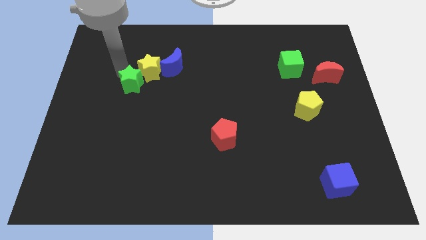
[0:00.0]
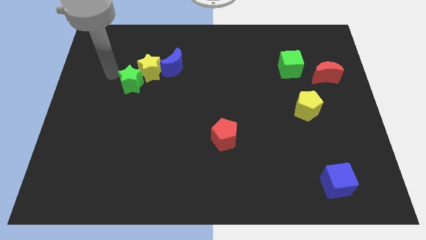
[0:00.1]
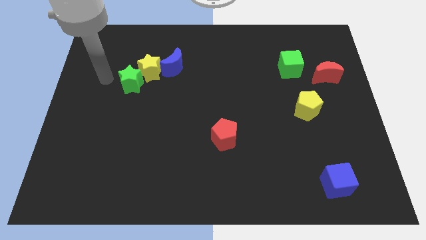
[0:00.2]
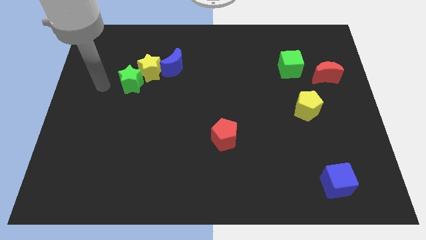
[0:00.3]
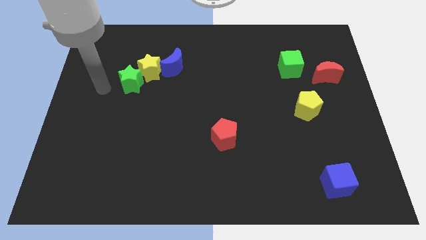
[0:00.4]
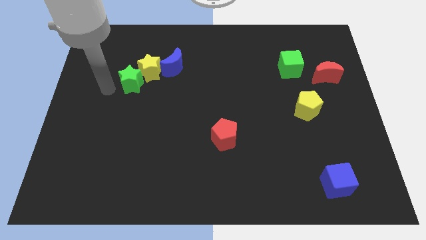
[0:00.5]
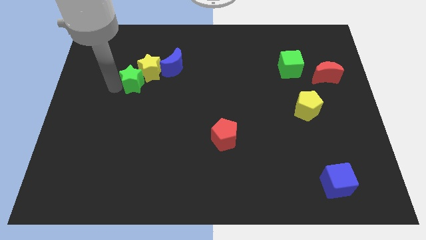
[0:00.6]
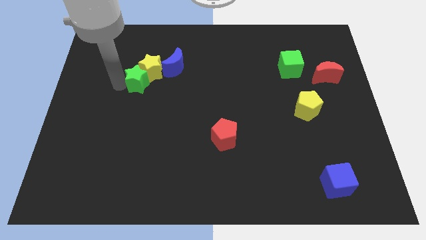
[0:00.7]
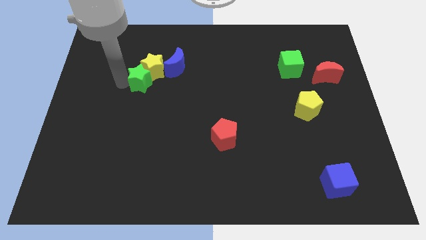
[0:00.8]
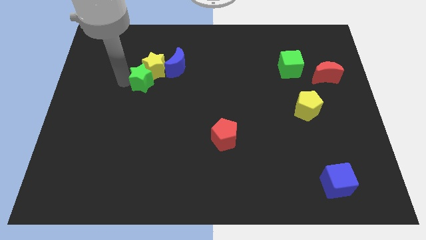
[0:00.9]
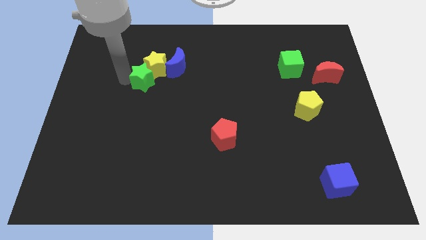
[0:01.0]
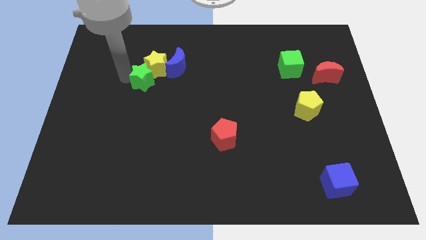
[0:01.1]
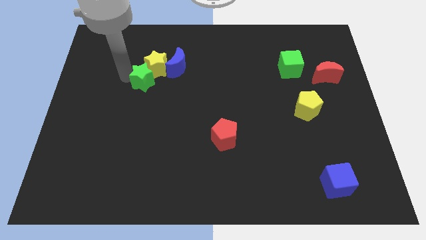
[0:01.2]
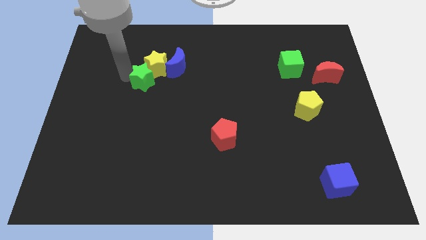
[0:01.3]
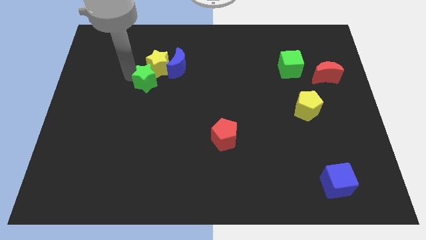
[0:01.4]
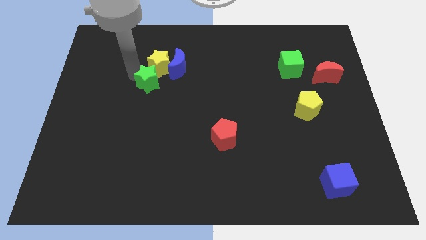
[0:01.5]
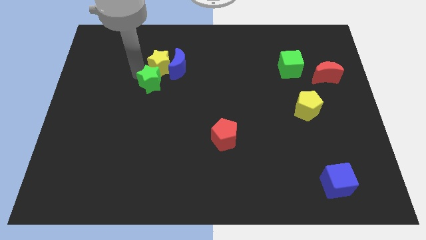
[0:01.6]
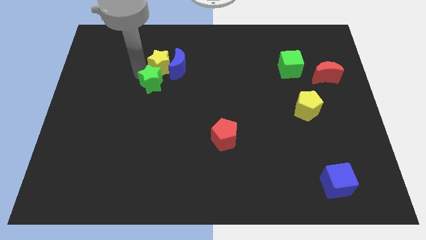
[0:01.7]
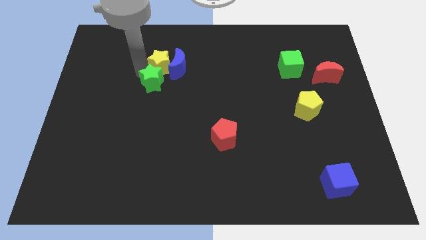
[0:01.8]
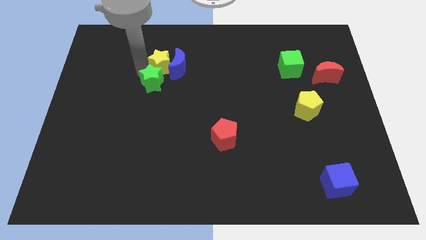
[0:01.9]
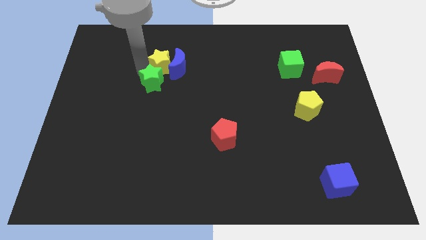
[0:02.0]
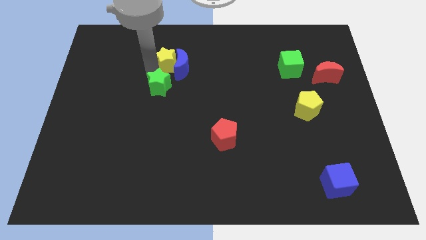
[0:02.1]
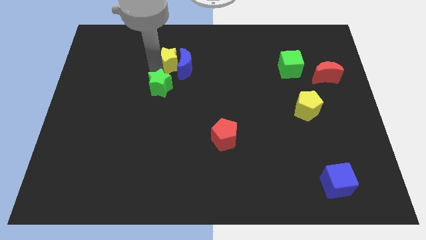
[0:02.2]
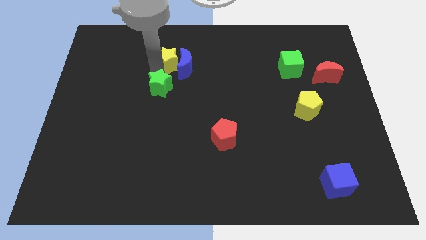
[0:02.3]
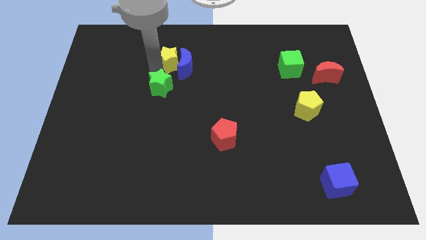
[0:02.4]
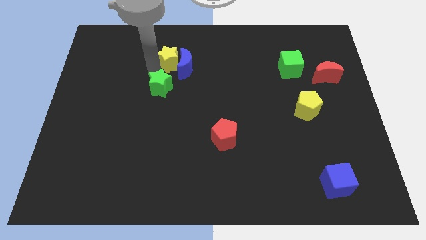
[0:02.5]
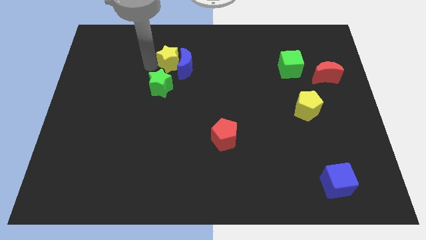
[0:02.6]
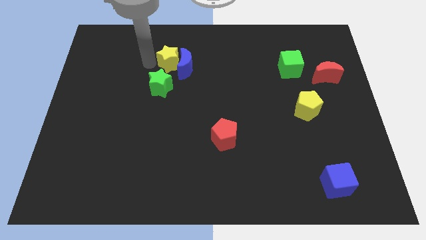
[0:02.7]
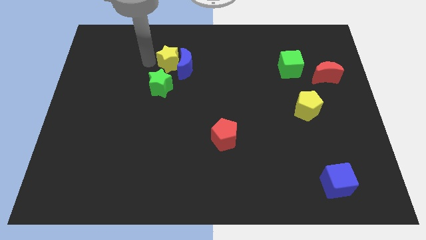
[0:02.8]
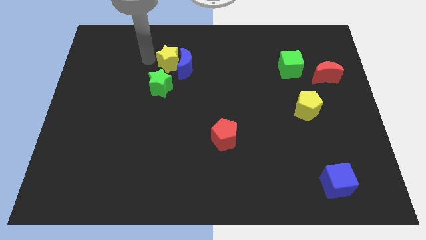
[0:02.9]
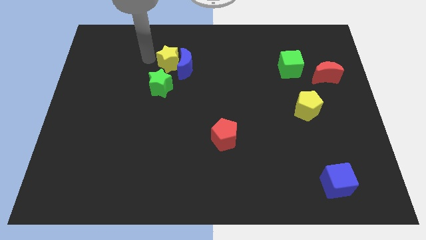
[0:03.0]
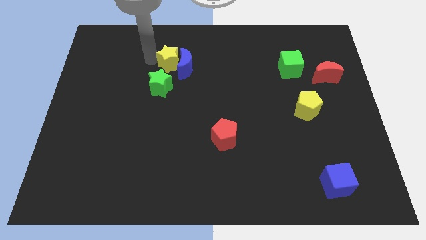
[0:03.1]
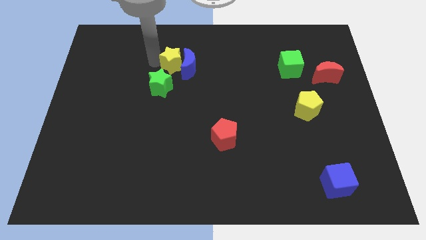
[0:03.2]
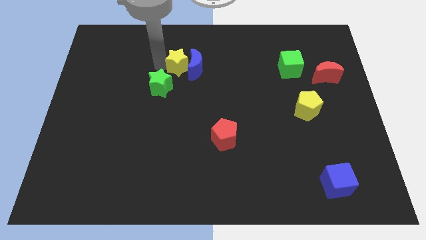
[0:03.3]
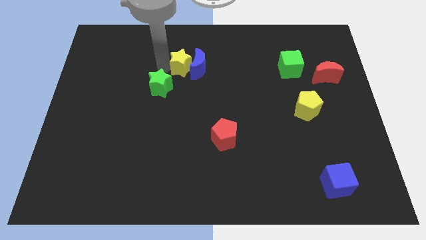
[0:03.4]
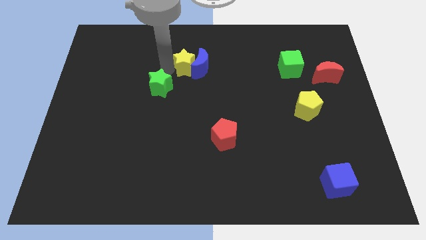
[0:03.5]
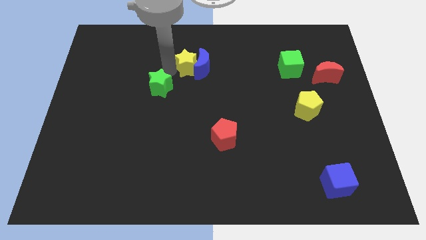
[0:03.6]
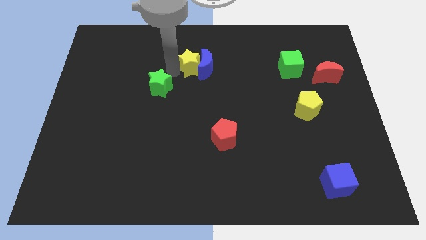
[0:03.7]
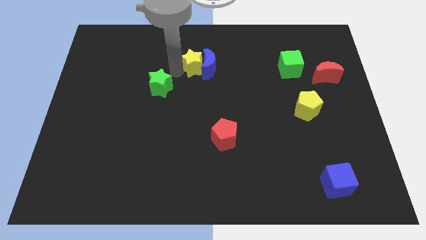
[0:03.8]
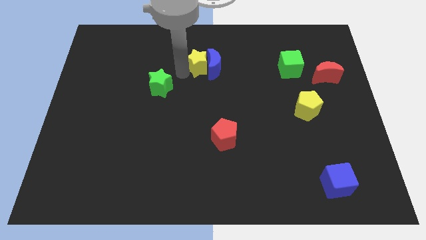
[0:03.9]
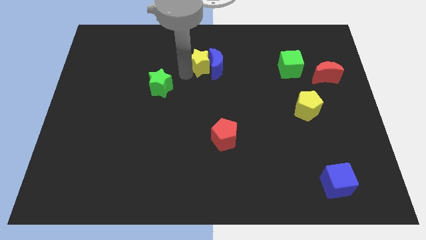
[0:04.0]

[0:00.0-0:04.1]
separate the green star and yellow star

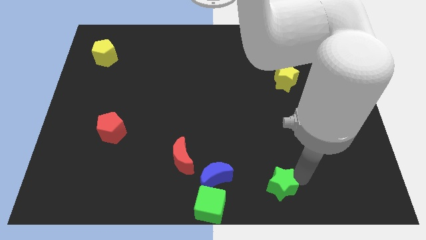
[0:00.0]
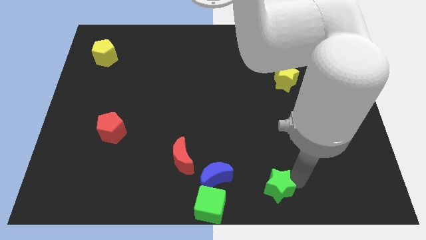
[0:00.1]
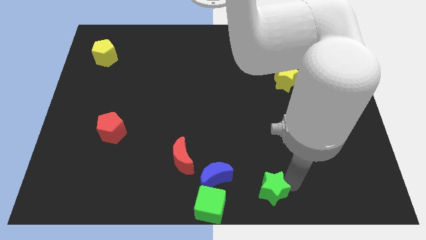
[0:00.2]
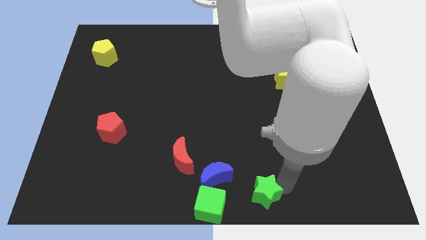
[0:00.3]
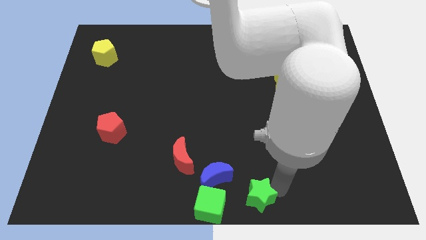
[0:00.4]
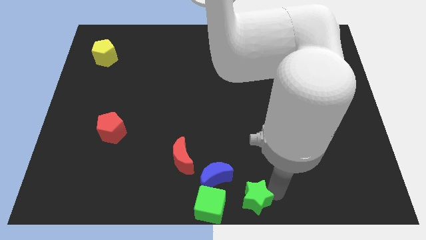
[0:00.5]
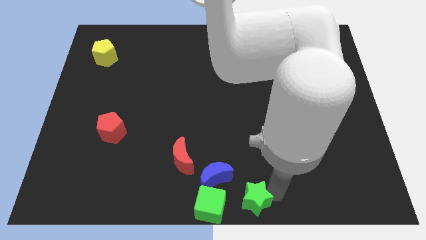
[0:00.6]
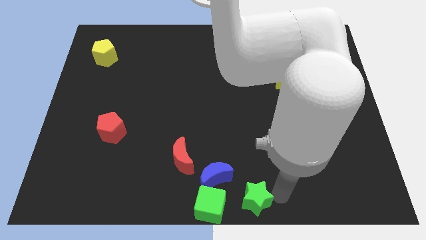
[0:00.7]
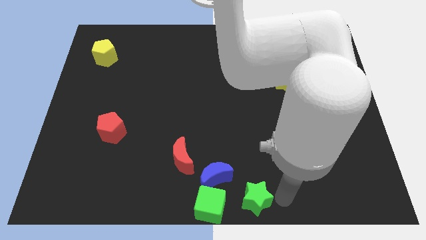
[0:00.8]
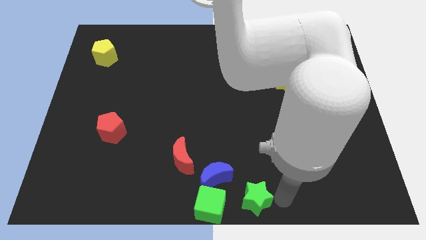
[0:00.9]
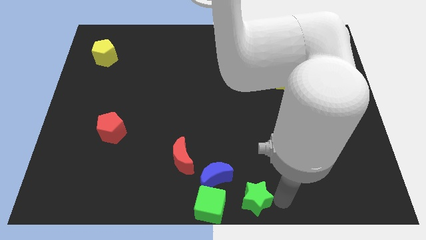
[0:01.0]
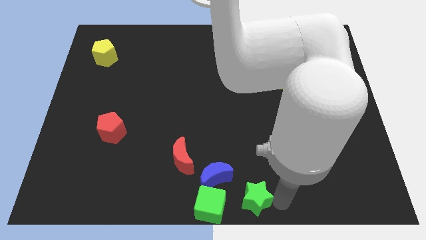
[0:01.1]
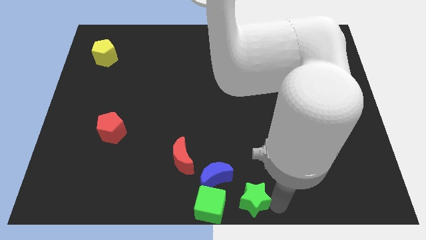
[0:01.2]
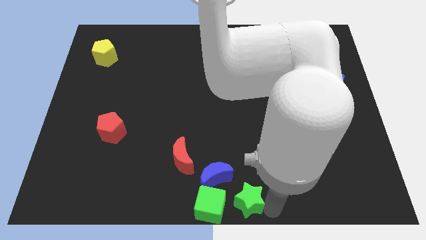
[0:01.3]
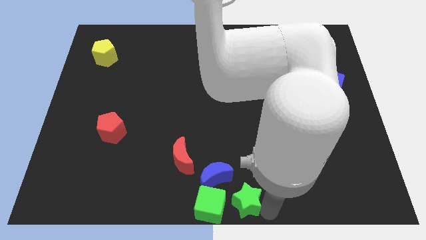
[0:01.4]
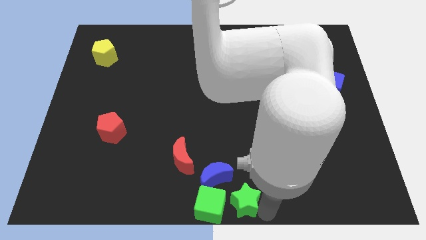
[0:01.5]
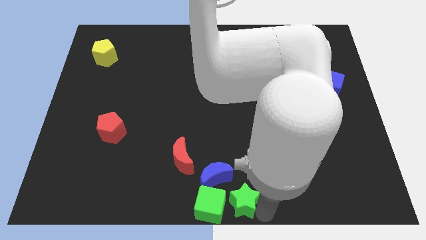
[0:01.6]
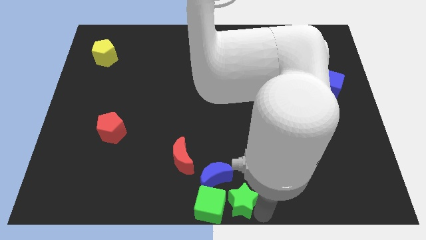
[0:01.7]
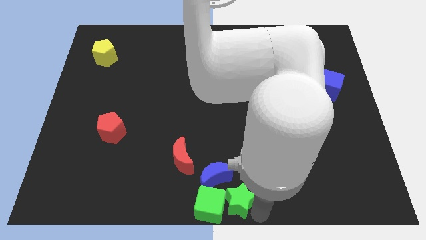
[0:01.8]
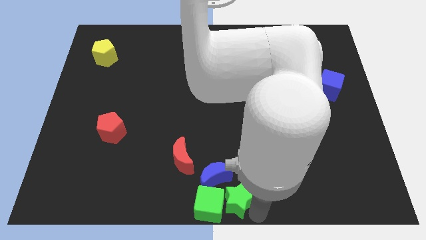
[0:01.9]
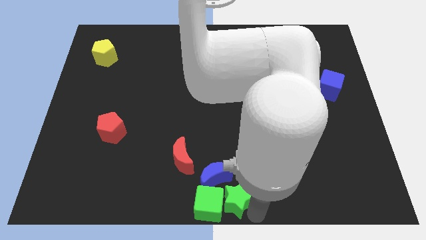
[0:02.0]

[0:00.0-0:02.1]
push green star into green cube

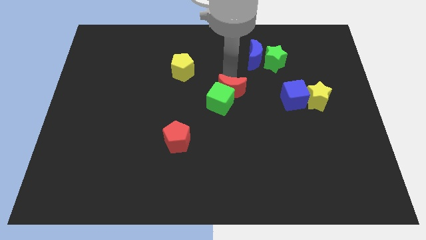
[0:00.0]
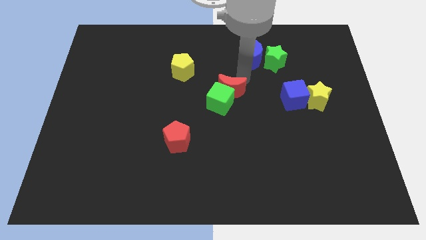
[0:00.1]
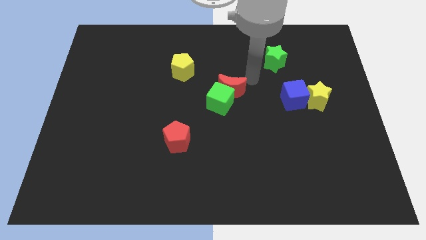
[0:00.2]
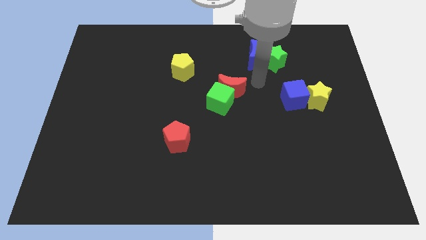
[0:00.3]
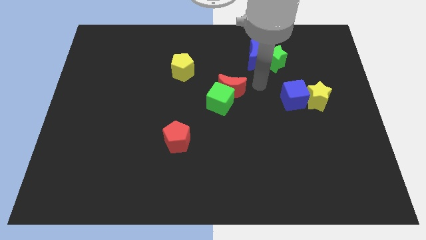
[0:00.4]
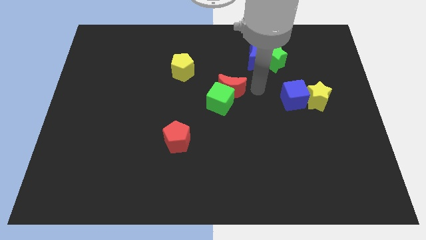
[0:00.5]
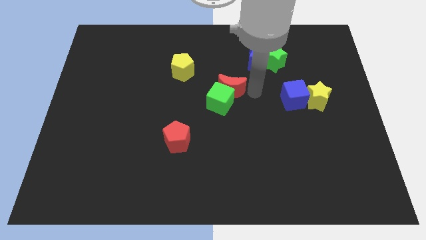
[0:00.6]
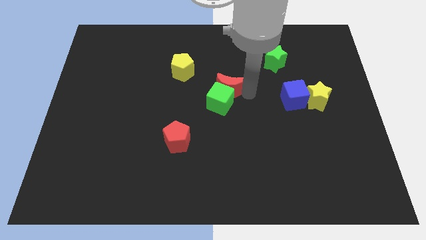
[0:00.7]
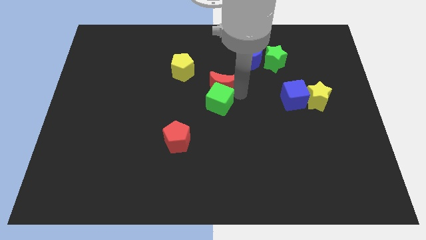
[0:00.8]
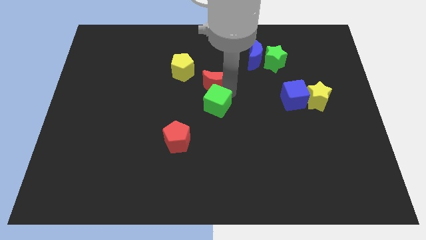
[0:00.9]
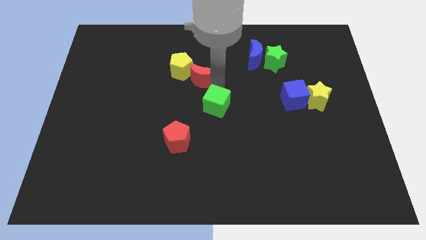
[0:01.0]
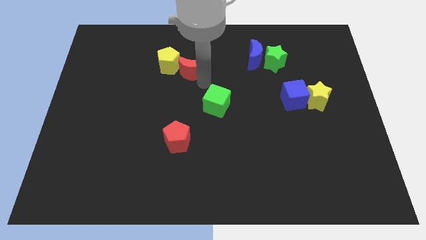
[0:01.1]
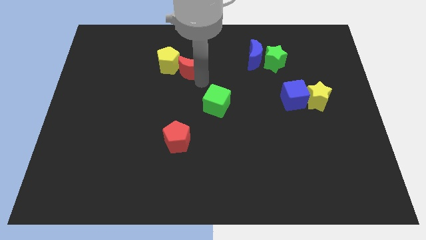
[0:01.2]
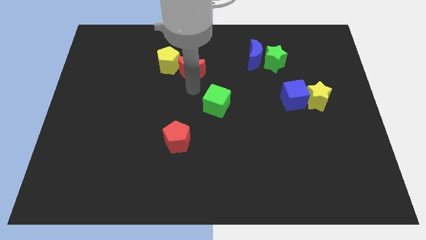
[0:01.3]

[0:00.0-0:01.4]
move the red crescent into the yellow pentagon

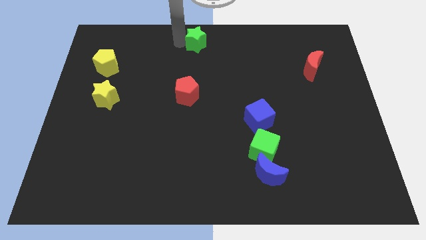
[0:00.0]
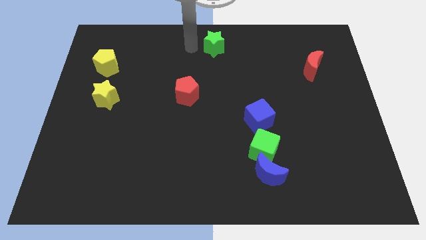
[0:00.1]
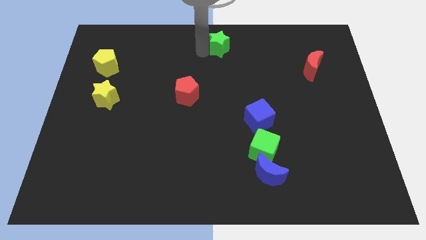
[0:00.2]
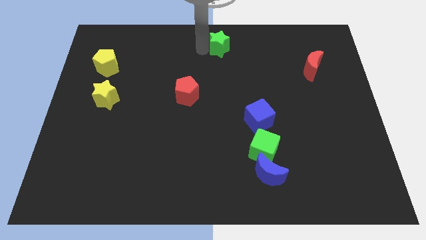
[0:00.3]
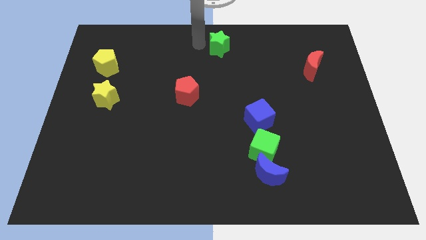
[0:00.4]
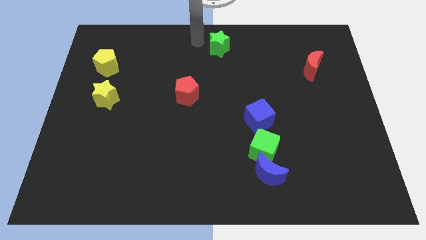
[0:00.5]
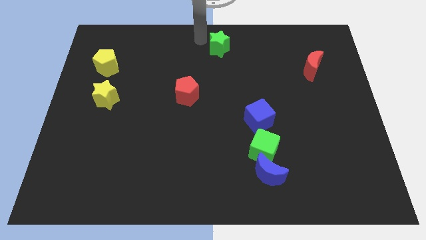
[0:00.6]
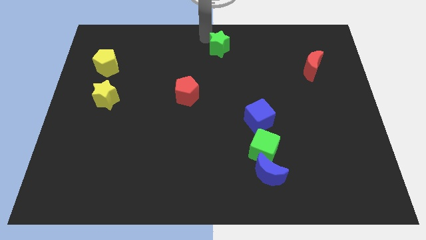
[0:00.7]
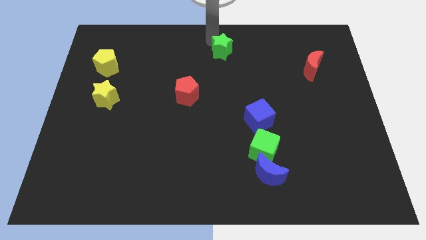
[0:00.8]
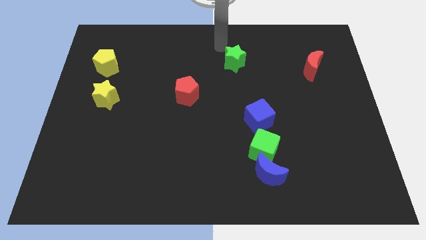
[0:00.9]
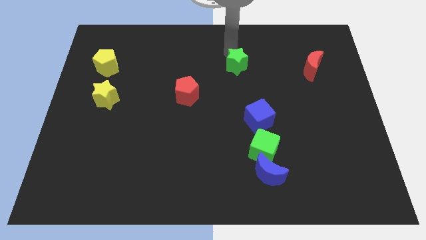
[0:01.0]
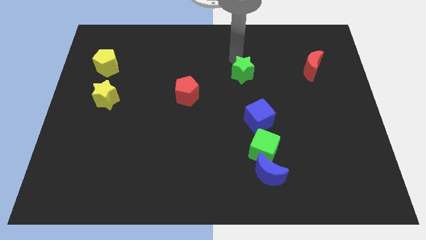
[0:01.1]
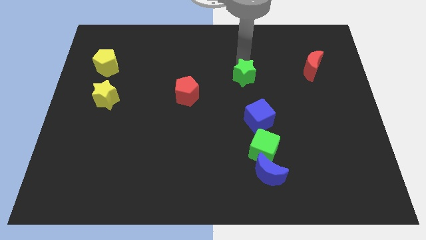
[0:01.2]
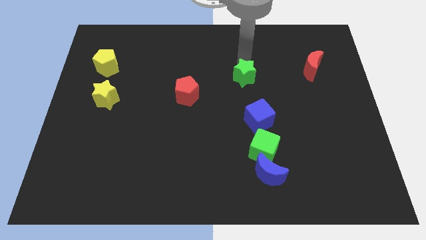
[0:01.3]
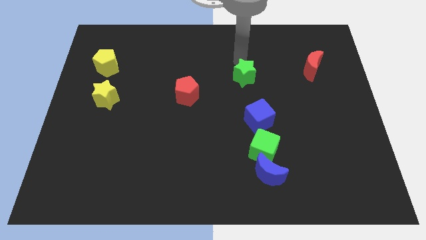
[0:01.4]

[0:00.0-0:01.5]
place the green star between the red pentagon and red moon
